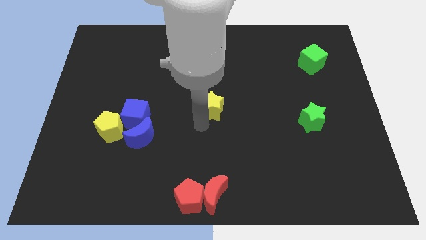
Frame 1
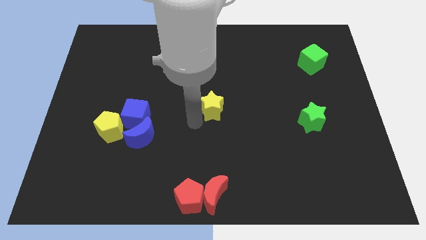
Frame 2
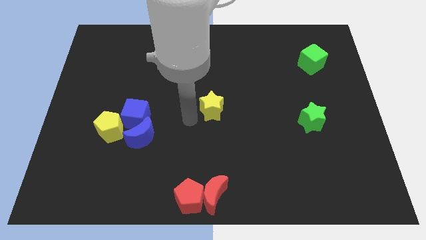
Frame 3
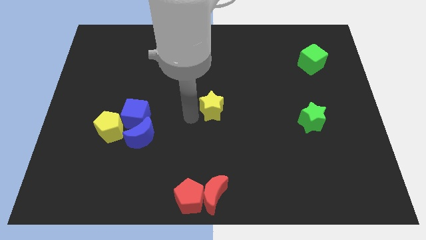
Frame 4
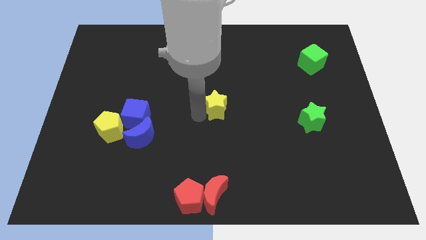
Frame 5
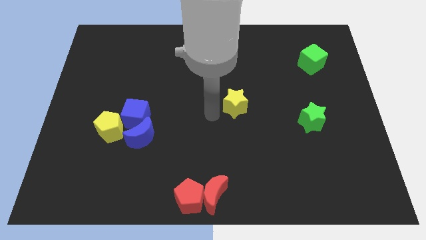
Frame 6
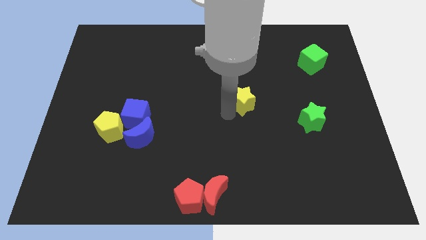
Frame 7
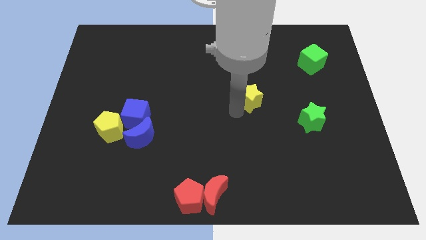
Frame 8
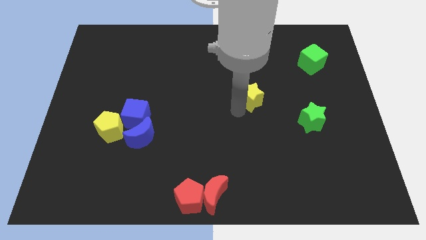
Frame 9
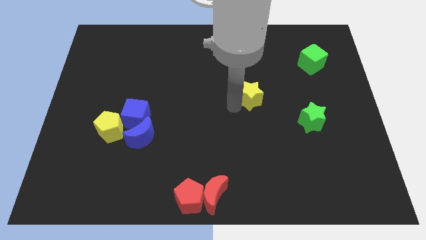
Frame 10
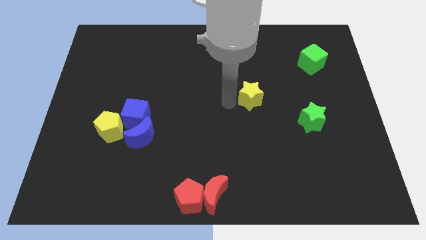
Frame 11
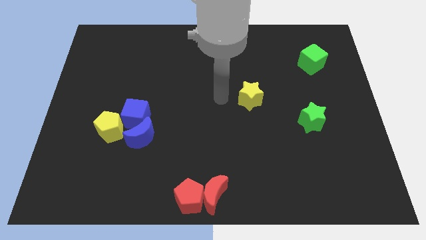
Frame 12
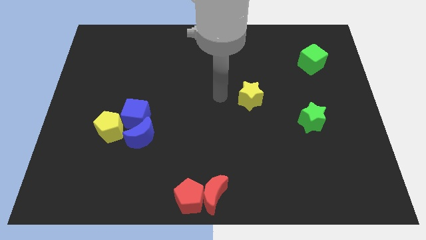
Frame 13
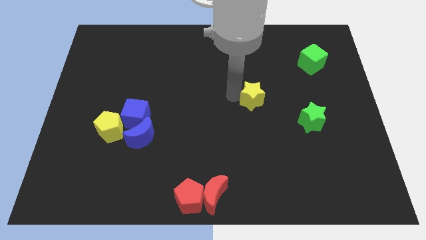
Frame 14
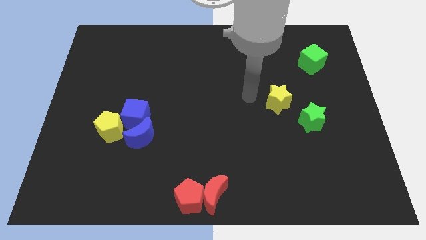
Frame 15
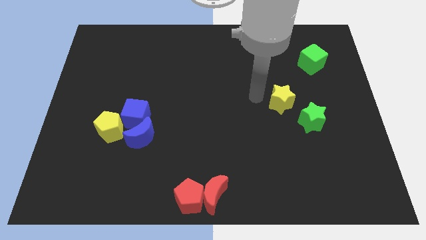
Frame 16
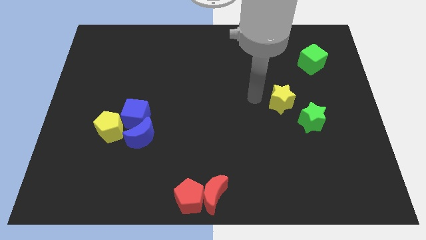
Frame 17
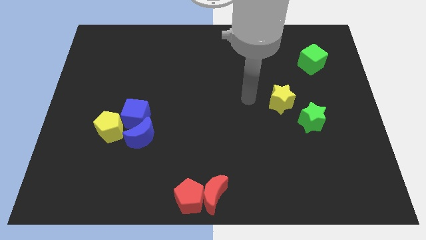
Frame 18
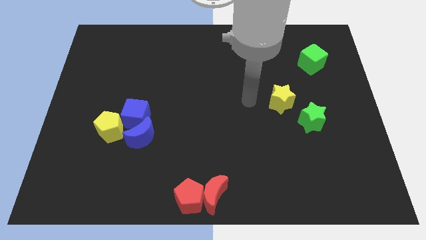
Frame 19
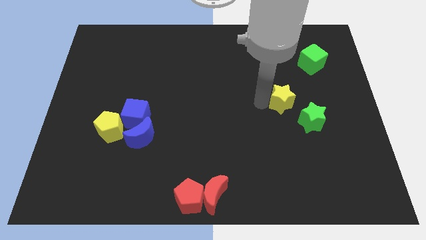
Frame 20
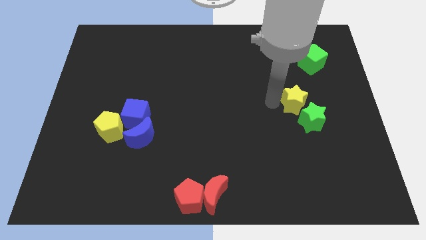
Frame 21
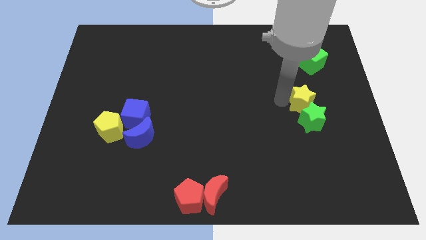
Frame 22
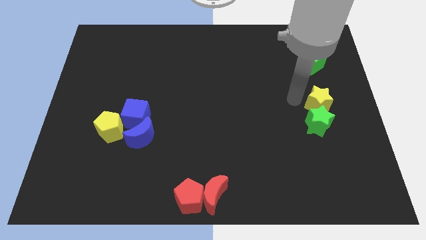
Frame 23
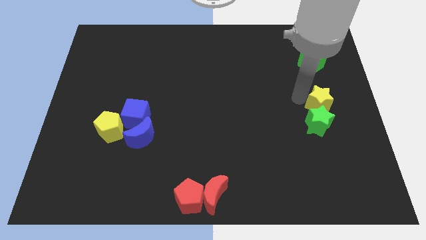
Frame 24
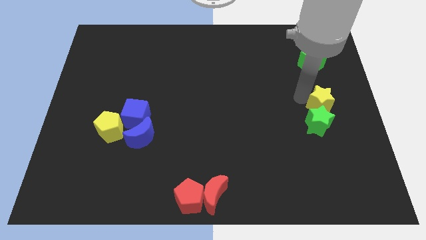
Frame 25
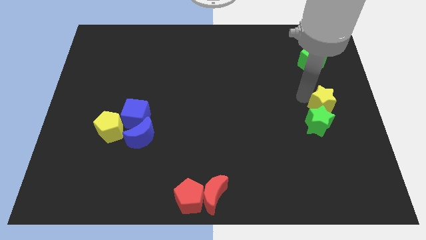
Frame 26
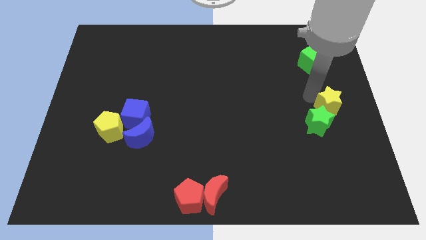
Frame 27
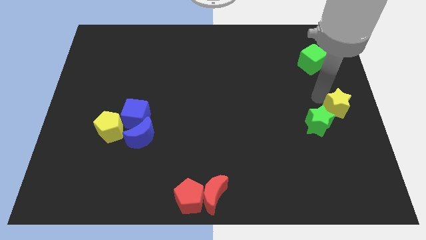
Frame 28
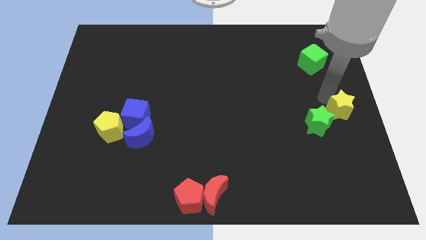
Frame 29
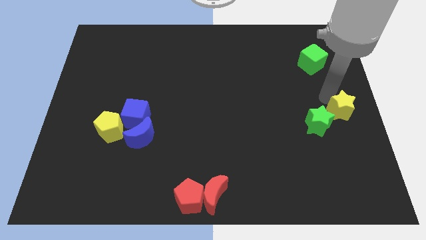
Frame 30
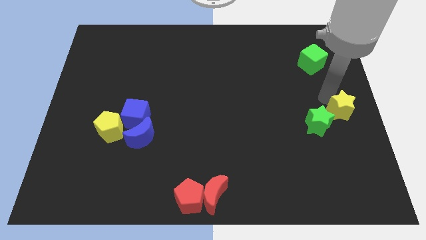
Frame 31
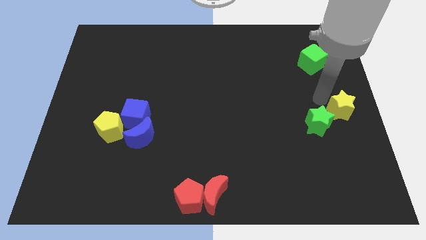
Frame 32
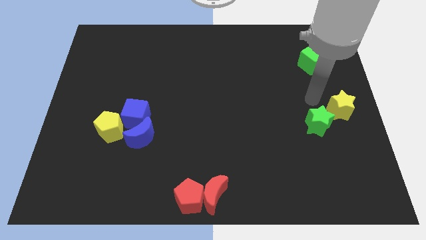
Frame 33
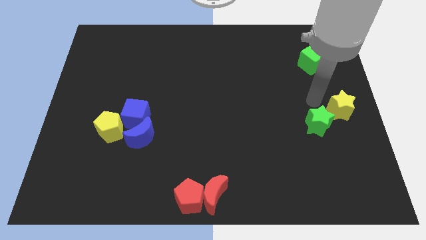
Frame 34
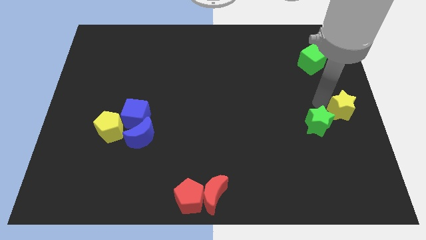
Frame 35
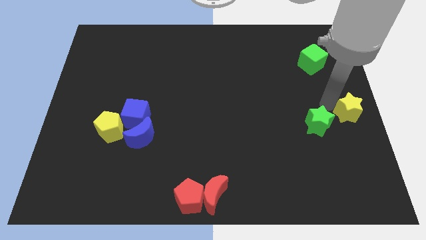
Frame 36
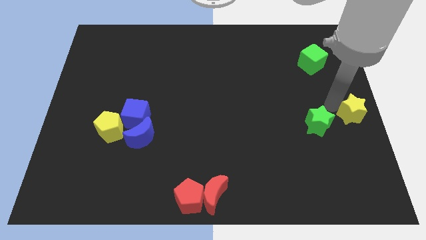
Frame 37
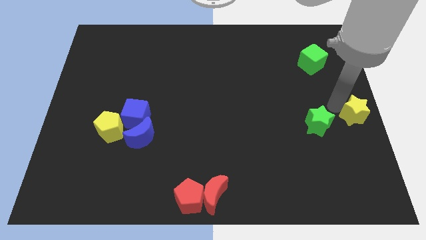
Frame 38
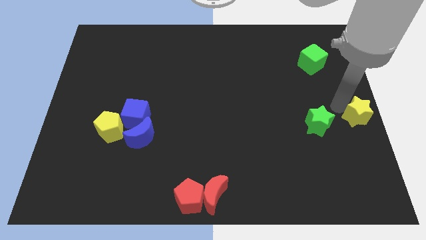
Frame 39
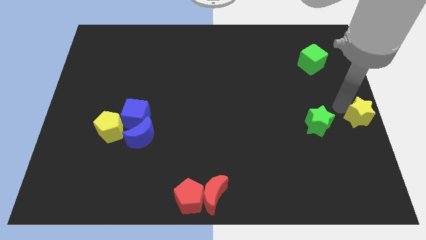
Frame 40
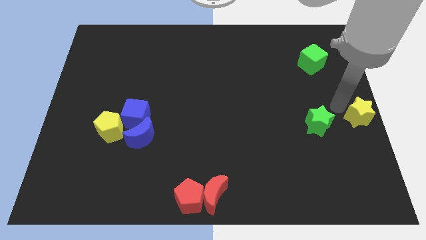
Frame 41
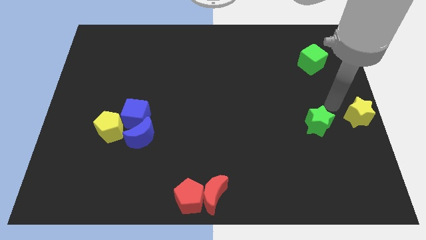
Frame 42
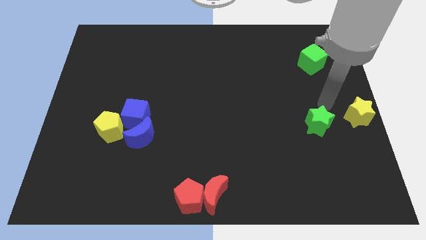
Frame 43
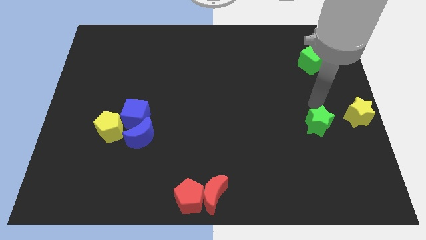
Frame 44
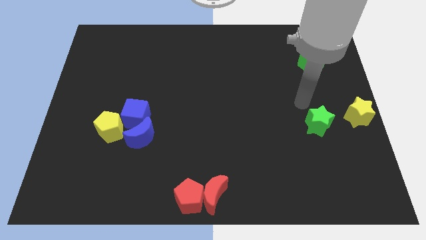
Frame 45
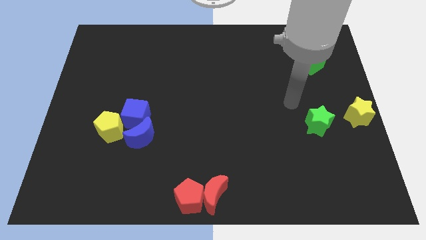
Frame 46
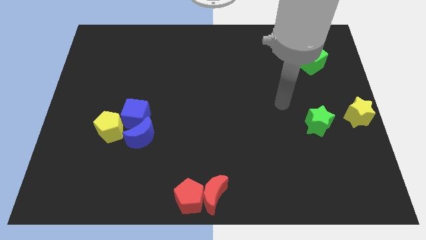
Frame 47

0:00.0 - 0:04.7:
place the yellow star to the right centre of the board

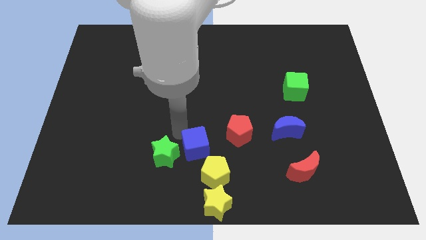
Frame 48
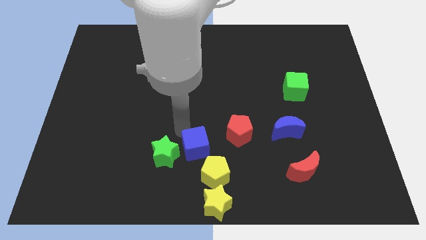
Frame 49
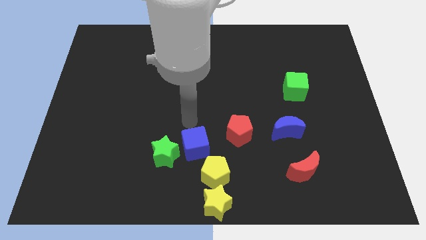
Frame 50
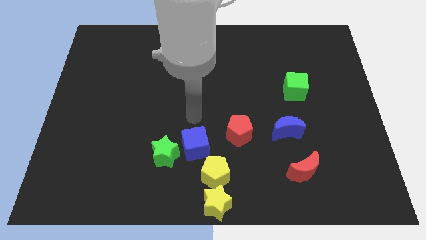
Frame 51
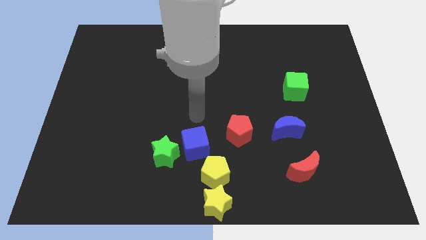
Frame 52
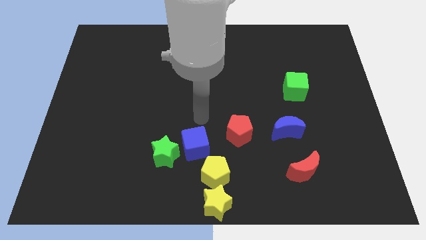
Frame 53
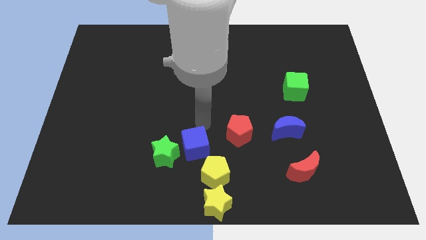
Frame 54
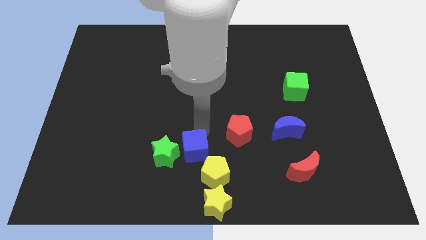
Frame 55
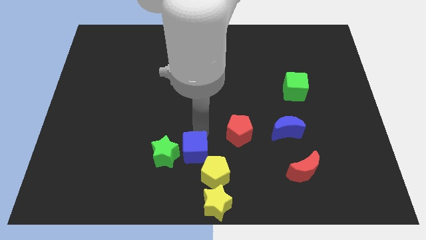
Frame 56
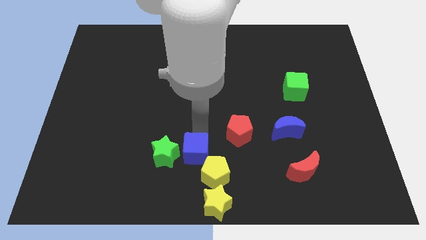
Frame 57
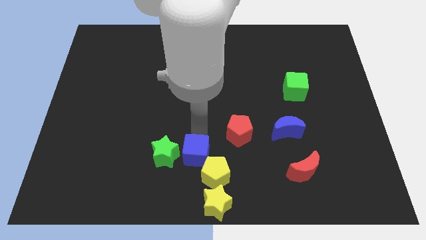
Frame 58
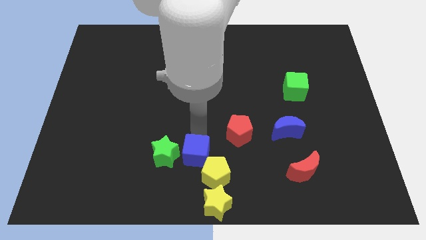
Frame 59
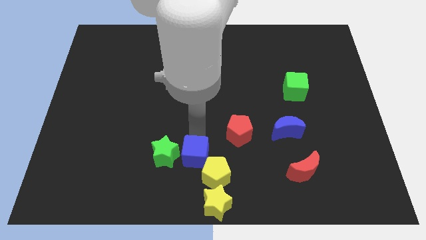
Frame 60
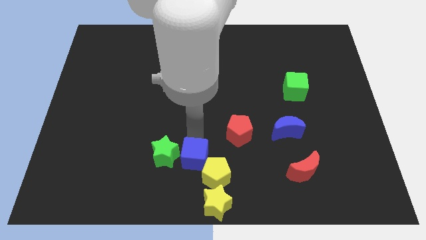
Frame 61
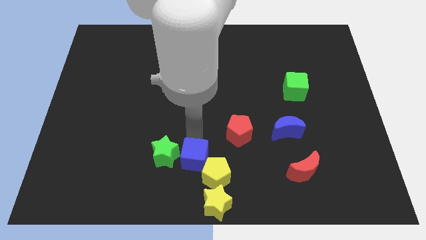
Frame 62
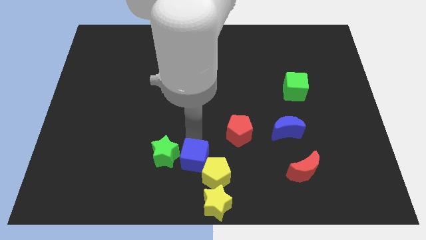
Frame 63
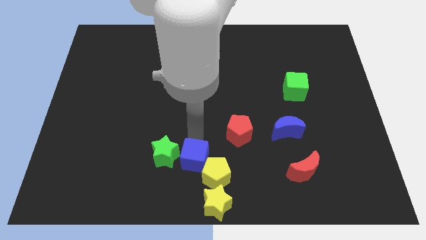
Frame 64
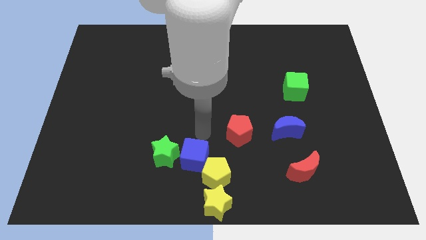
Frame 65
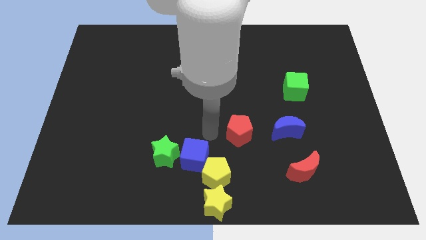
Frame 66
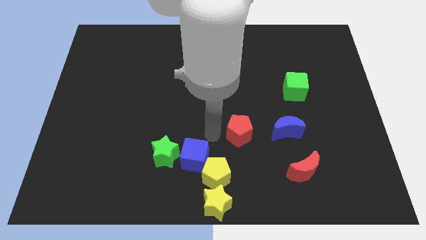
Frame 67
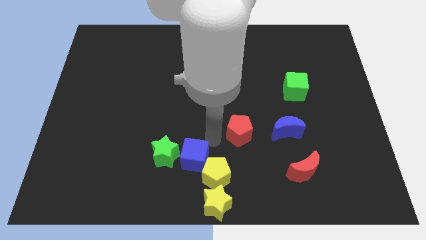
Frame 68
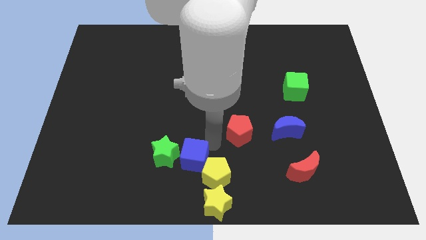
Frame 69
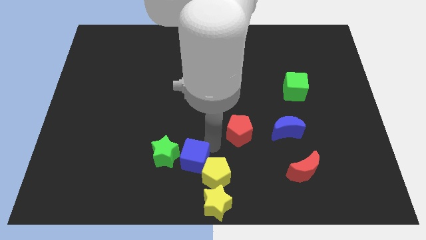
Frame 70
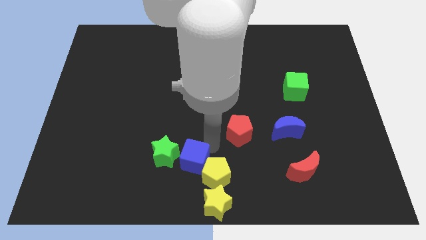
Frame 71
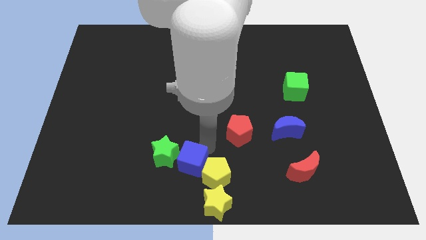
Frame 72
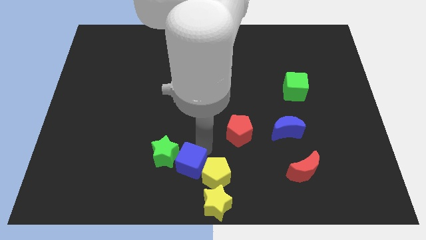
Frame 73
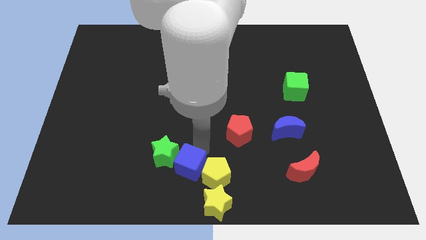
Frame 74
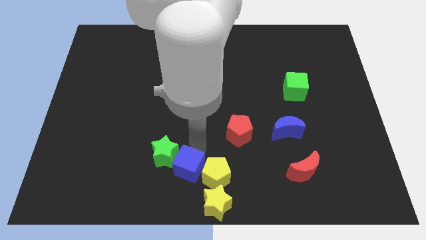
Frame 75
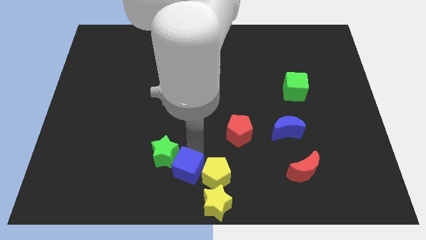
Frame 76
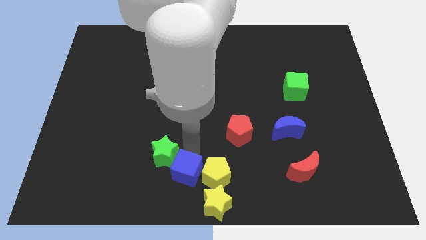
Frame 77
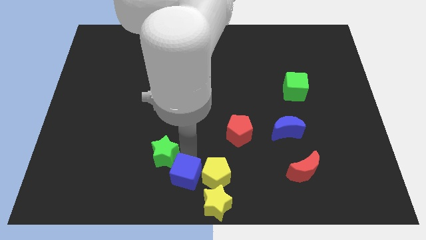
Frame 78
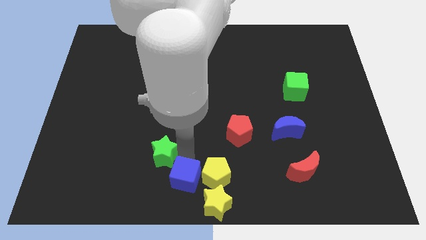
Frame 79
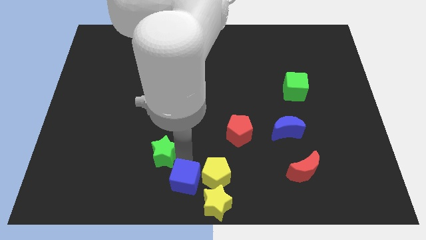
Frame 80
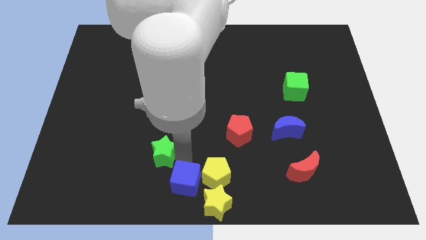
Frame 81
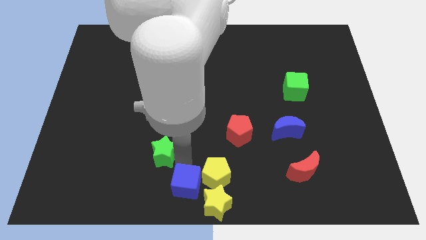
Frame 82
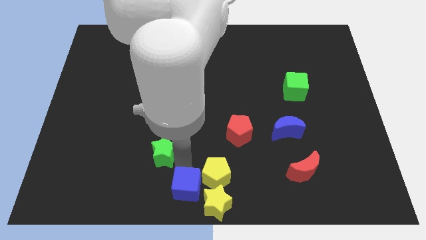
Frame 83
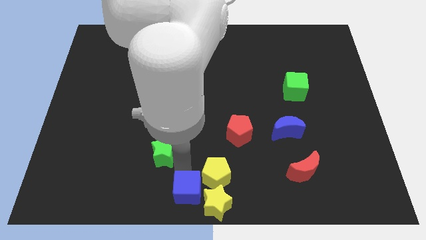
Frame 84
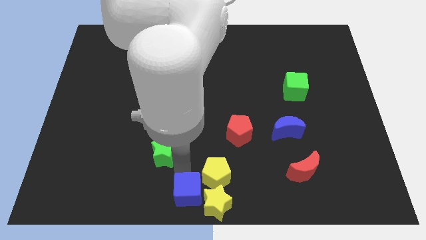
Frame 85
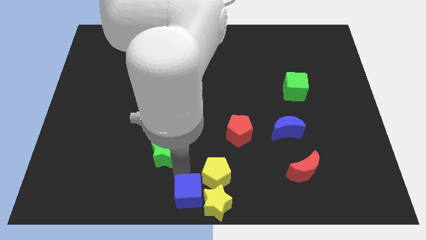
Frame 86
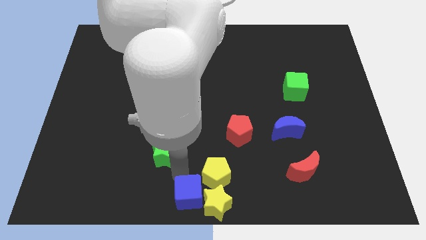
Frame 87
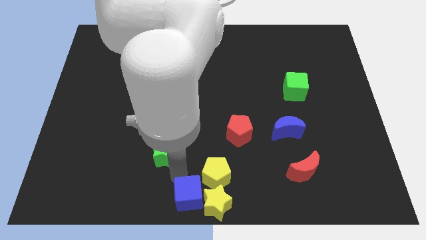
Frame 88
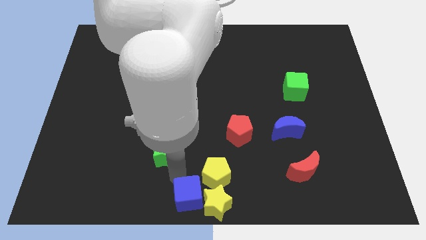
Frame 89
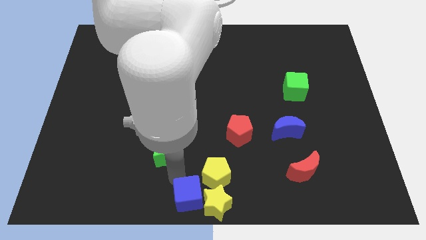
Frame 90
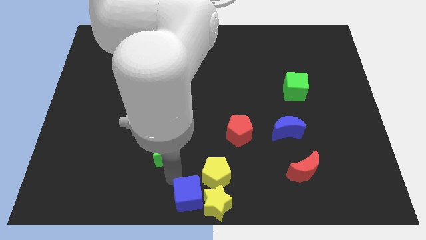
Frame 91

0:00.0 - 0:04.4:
push the blue cube to the bottom left side of the yellow pentagon
